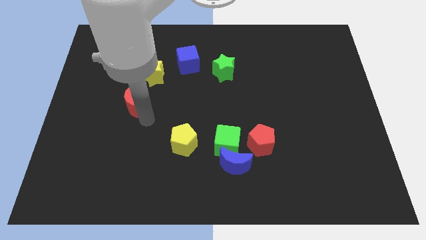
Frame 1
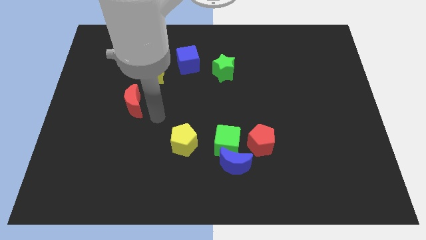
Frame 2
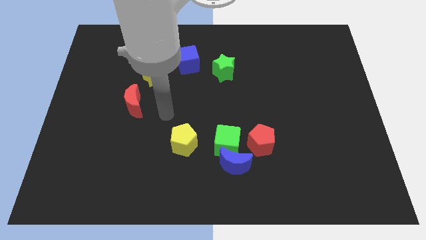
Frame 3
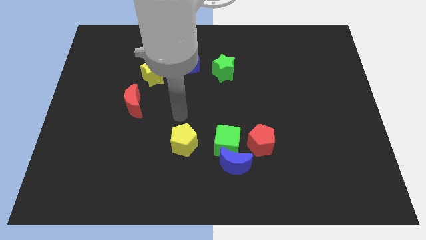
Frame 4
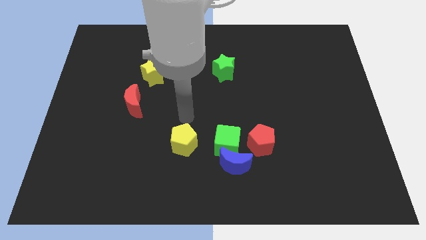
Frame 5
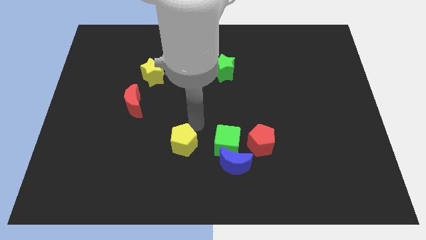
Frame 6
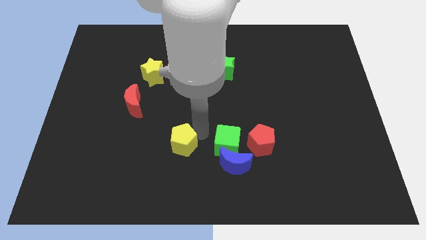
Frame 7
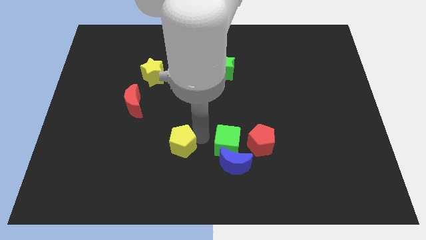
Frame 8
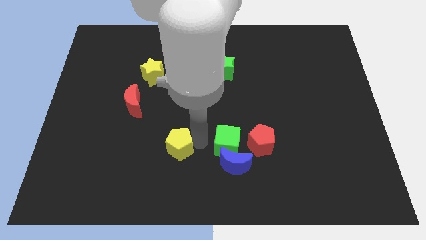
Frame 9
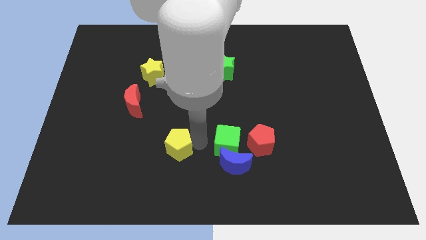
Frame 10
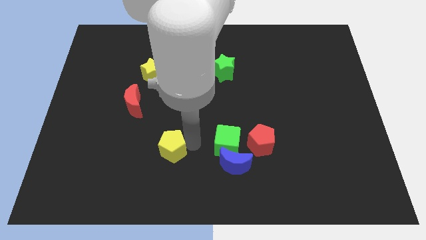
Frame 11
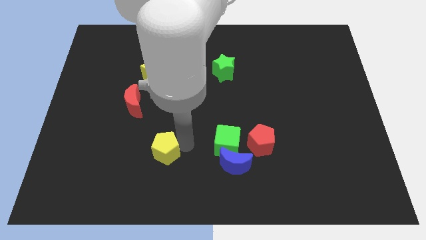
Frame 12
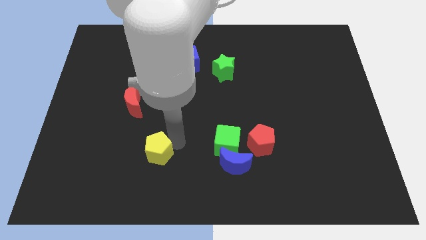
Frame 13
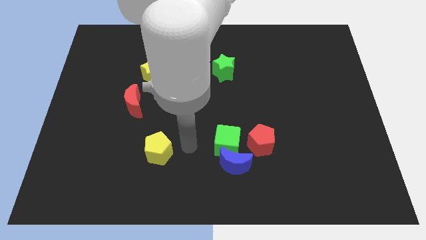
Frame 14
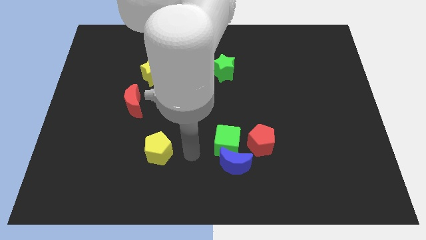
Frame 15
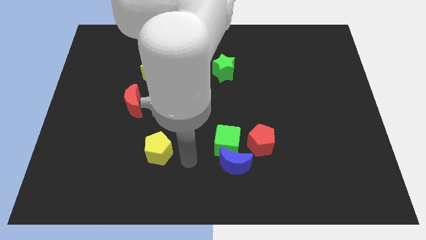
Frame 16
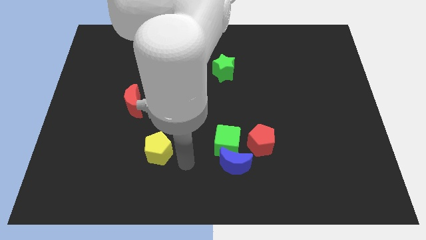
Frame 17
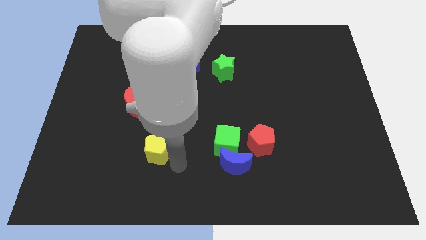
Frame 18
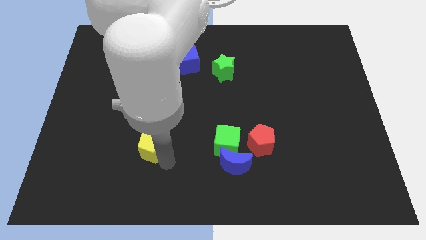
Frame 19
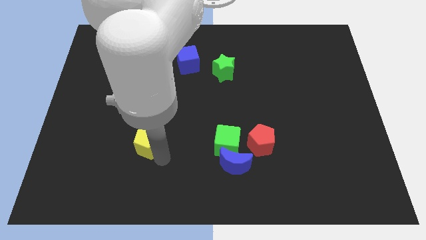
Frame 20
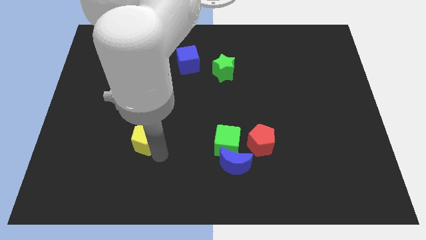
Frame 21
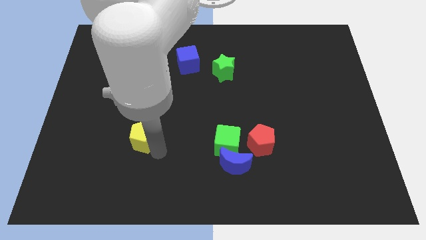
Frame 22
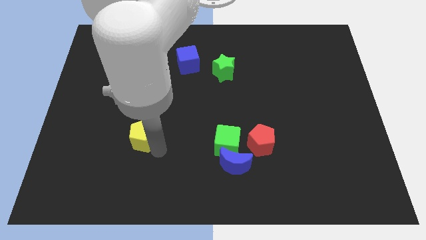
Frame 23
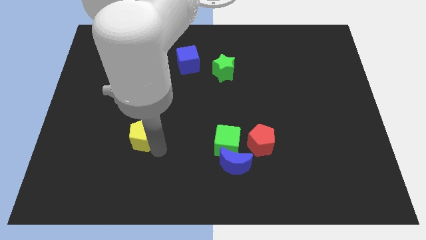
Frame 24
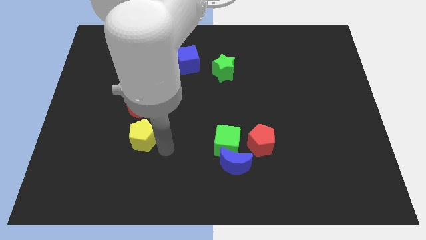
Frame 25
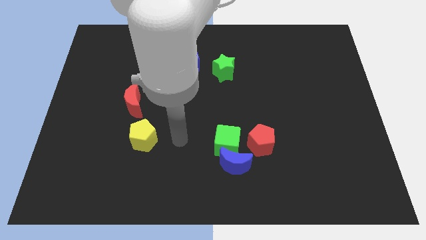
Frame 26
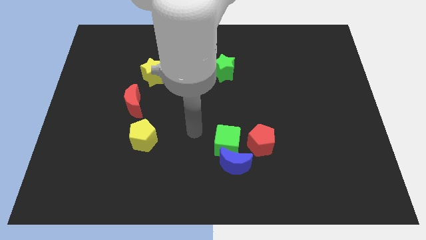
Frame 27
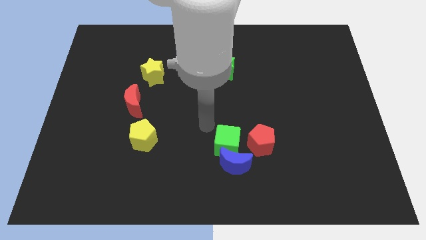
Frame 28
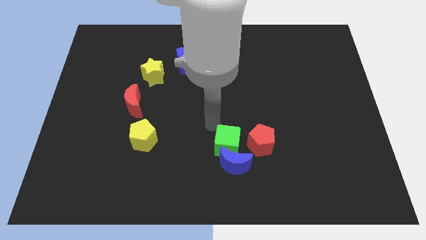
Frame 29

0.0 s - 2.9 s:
move the yellow pentagon to the bottom right of the red crescent

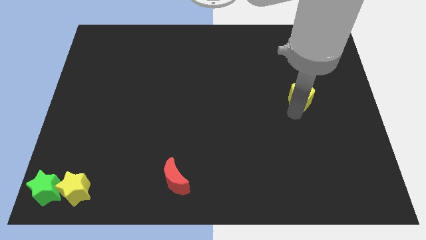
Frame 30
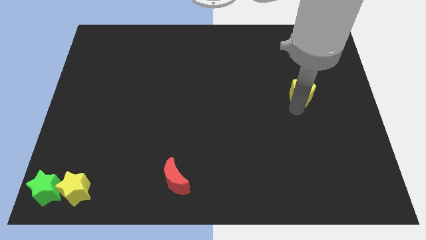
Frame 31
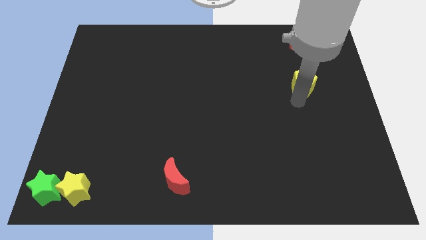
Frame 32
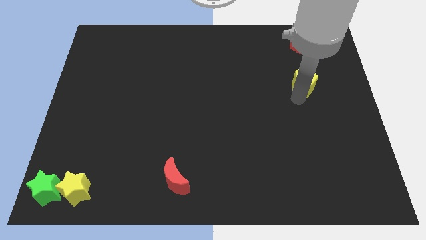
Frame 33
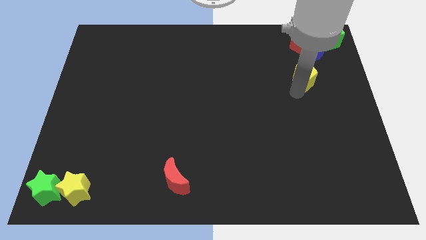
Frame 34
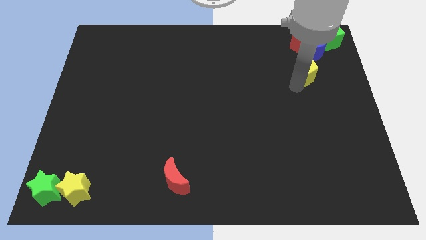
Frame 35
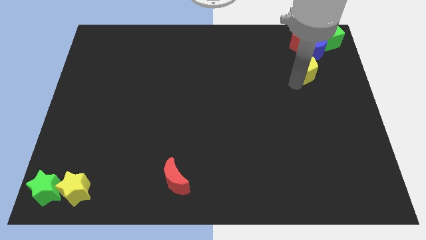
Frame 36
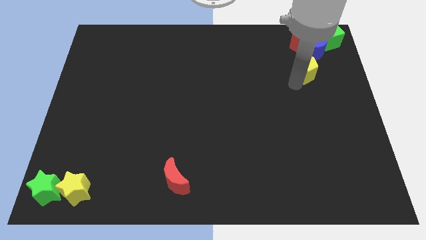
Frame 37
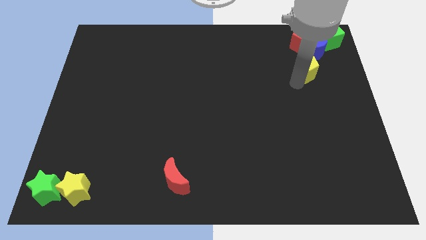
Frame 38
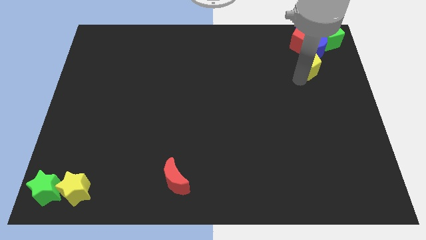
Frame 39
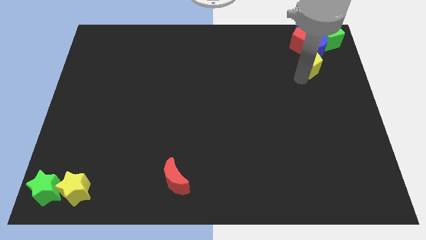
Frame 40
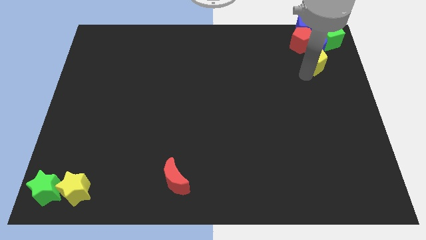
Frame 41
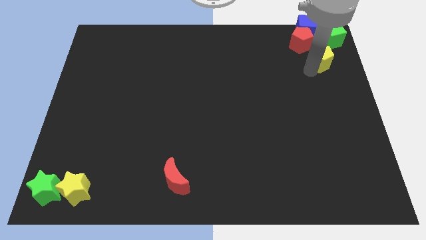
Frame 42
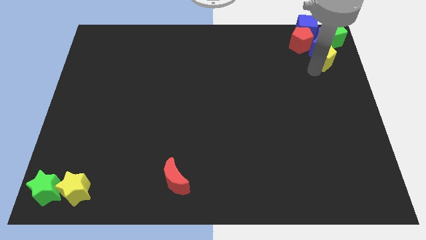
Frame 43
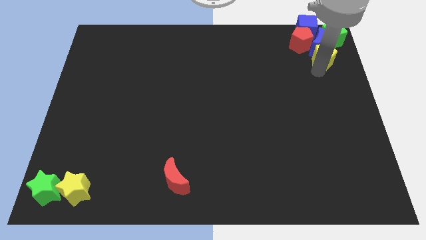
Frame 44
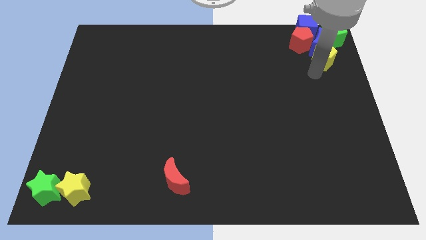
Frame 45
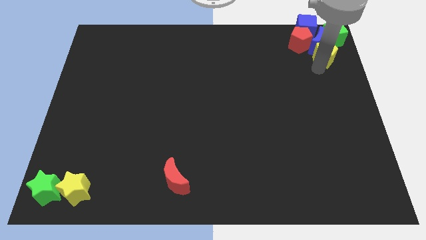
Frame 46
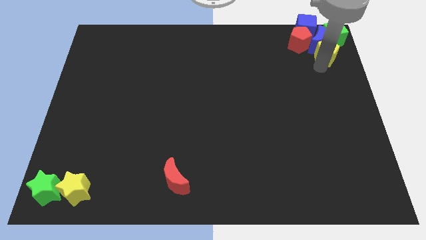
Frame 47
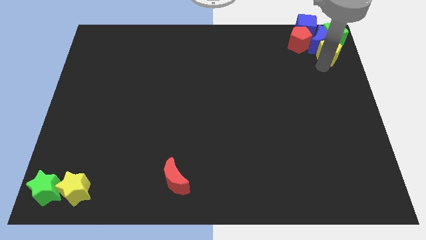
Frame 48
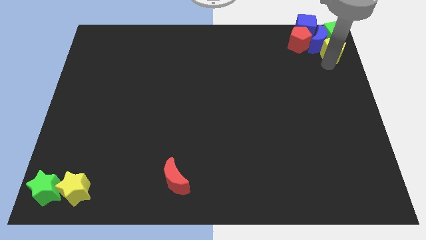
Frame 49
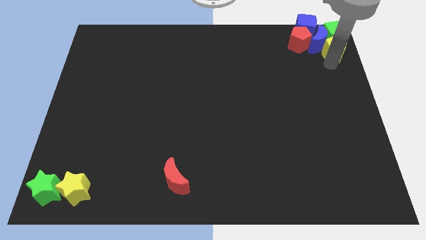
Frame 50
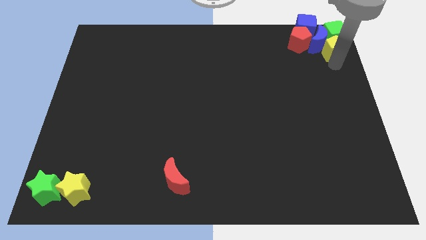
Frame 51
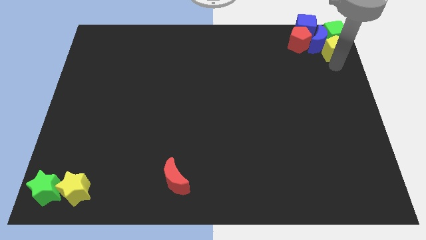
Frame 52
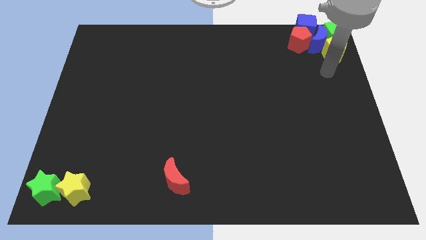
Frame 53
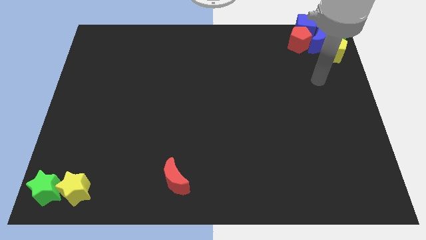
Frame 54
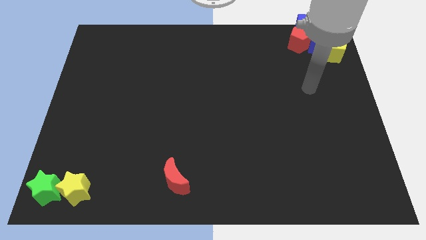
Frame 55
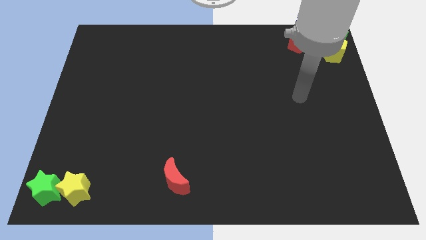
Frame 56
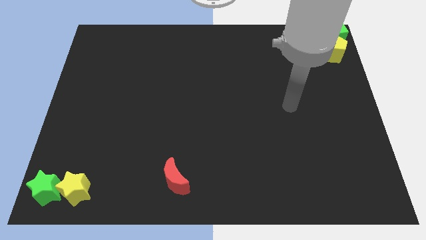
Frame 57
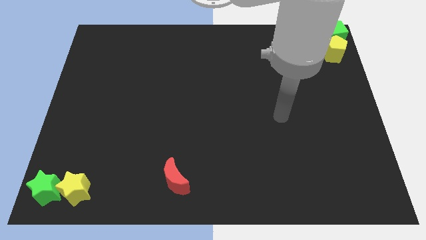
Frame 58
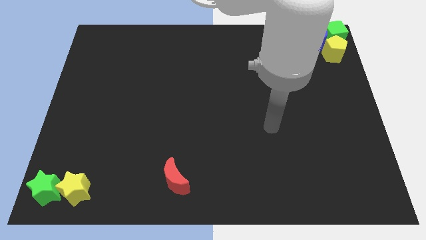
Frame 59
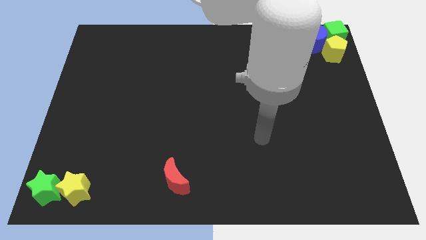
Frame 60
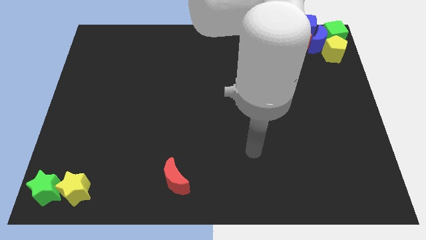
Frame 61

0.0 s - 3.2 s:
place yellow pentagon below green cube

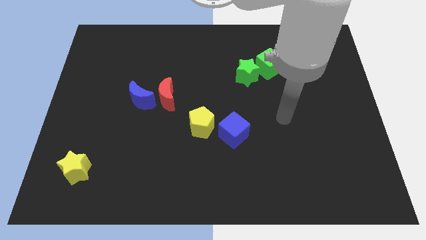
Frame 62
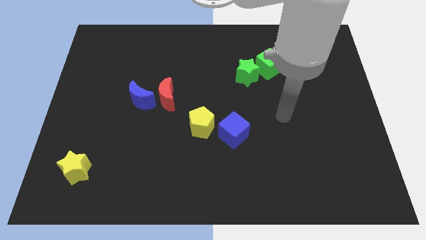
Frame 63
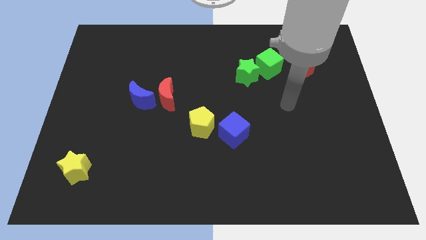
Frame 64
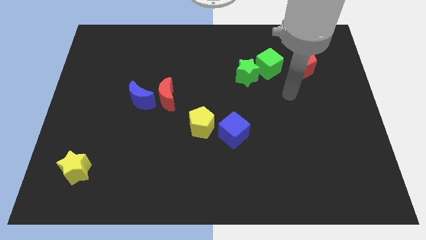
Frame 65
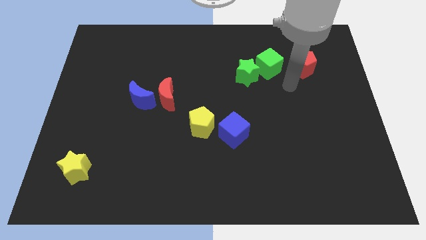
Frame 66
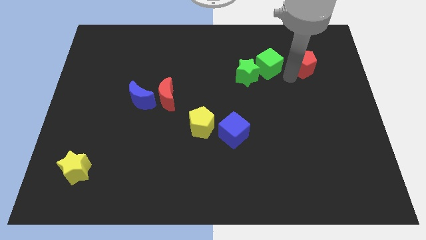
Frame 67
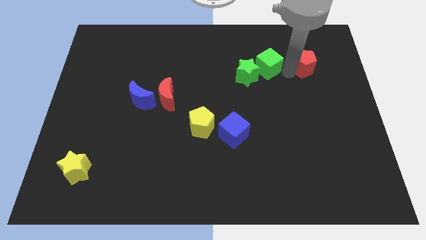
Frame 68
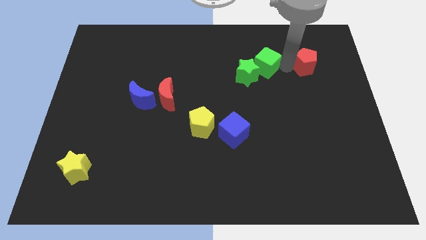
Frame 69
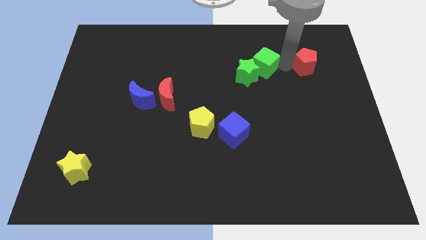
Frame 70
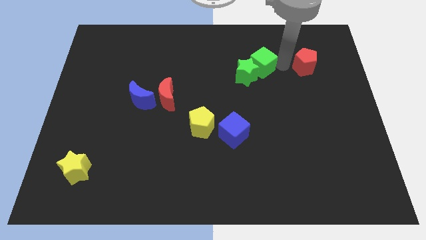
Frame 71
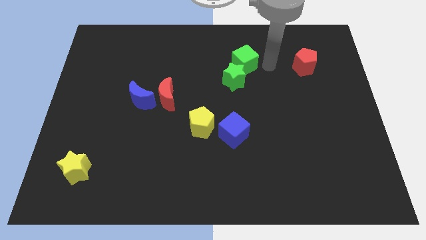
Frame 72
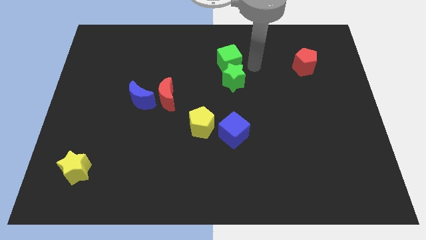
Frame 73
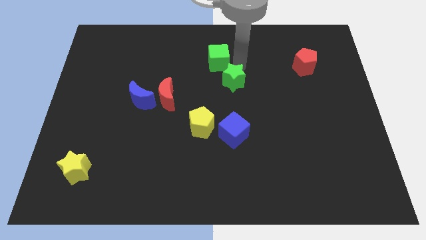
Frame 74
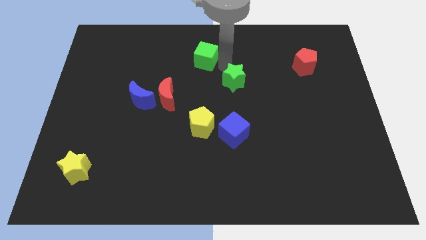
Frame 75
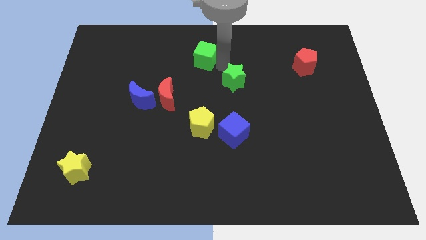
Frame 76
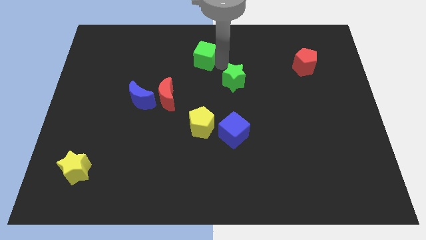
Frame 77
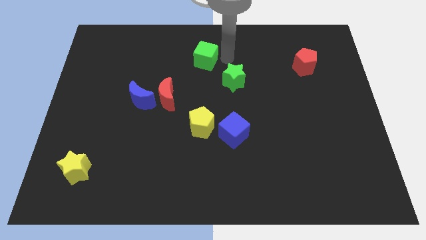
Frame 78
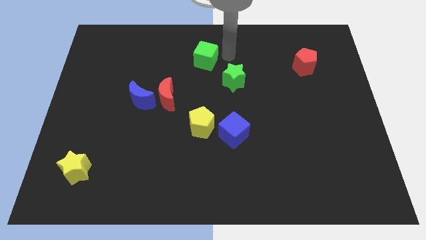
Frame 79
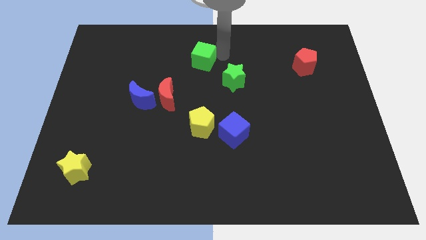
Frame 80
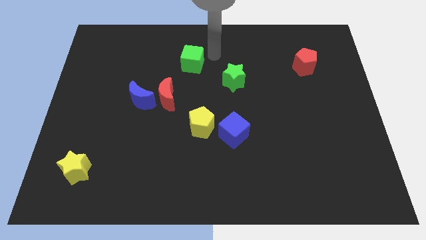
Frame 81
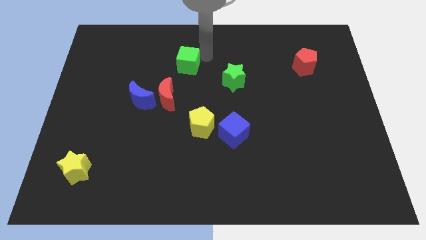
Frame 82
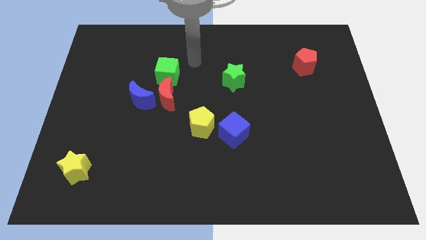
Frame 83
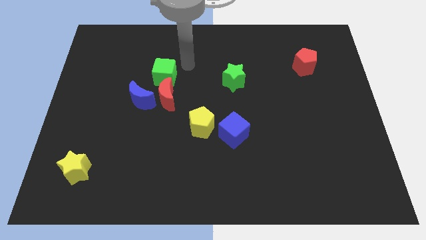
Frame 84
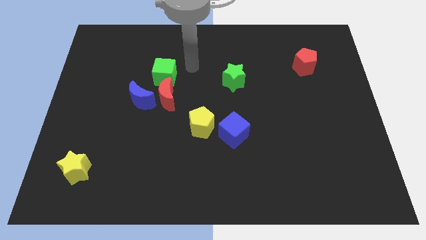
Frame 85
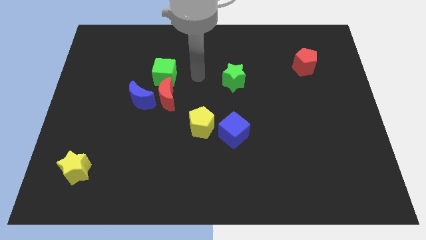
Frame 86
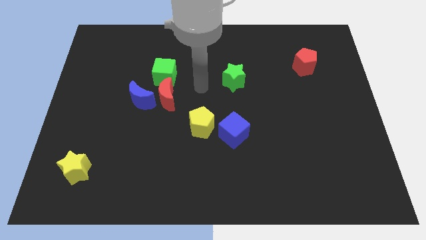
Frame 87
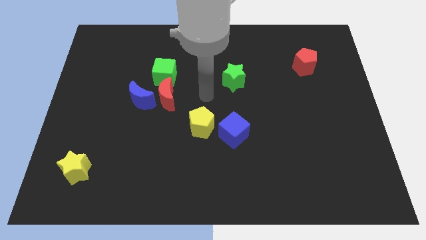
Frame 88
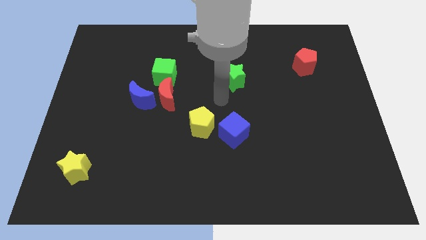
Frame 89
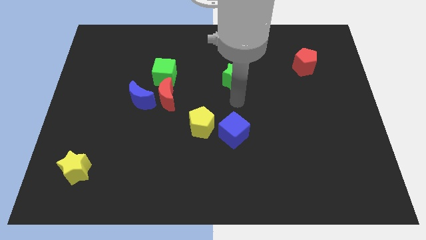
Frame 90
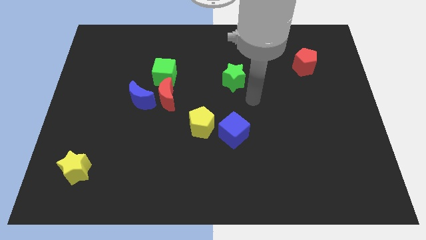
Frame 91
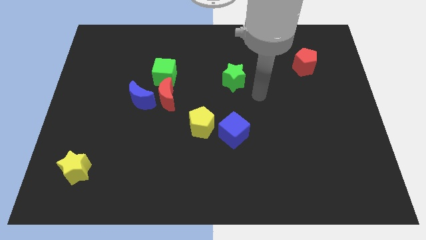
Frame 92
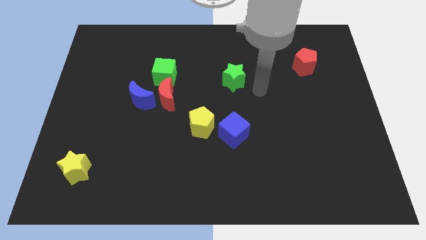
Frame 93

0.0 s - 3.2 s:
separate the green cube from the green star
